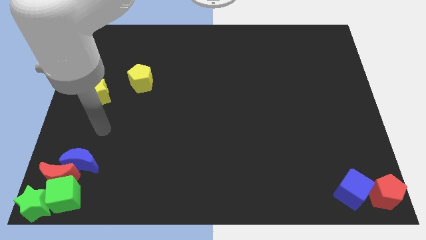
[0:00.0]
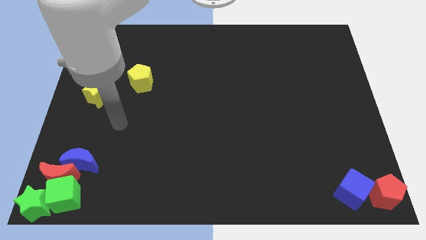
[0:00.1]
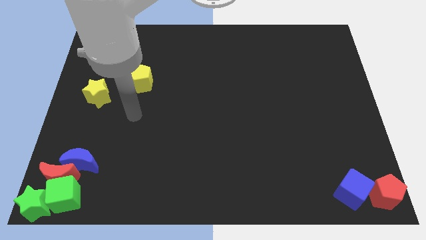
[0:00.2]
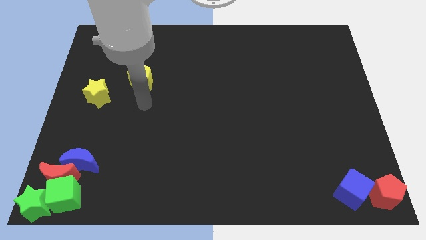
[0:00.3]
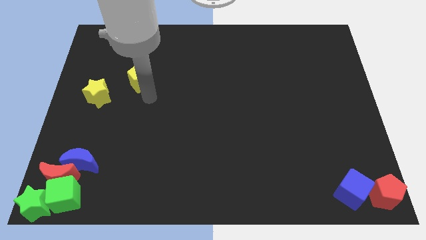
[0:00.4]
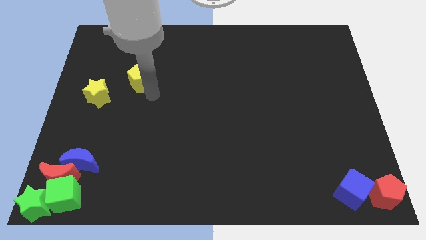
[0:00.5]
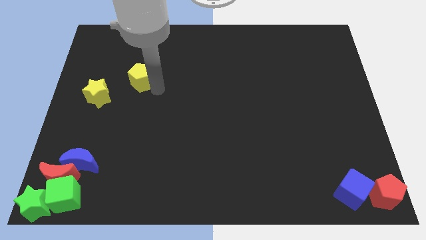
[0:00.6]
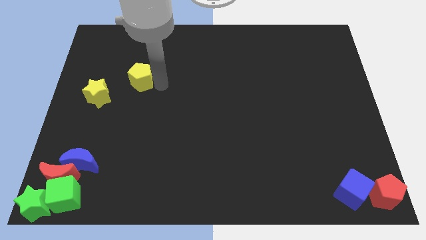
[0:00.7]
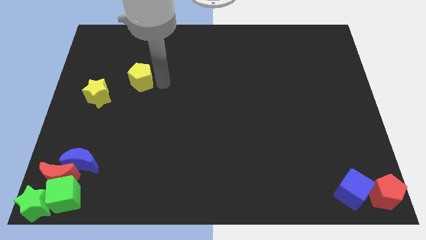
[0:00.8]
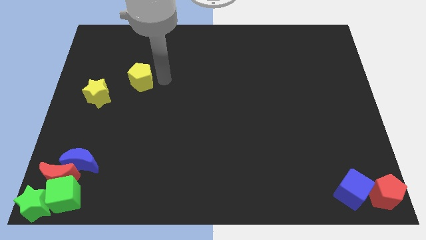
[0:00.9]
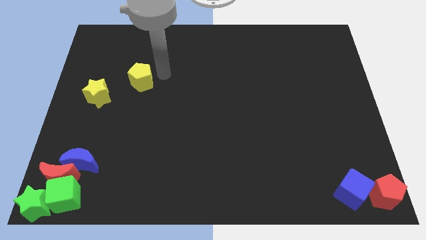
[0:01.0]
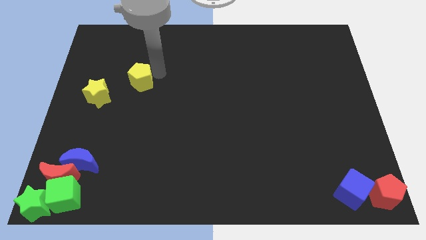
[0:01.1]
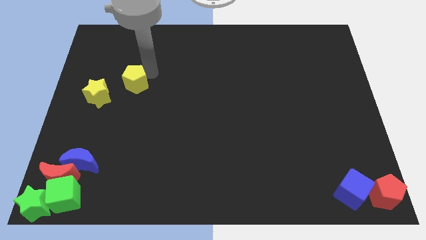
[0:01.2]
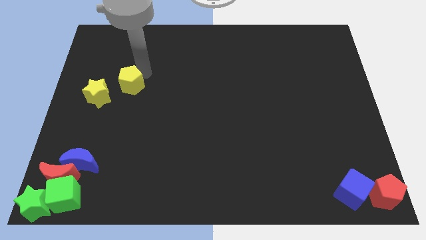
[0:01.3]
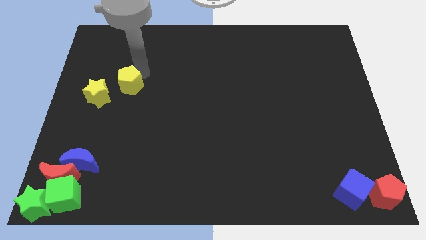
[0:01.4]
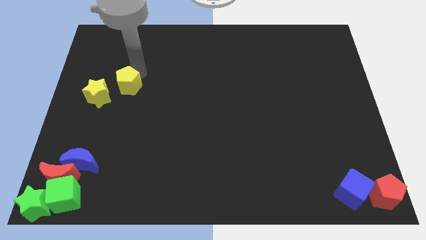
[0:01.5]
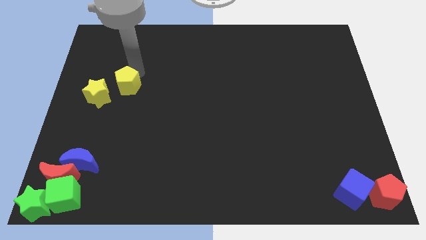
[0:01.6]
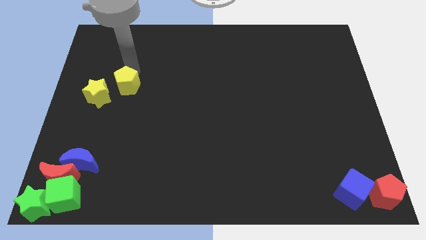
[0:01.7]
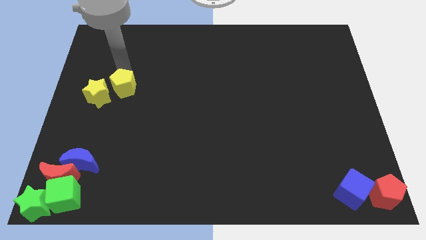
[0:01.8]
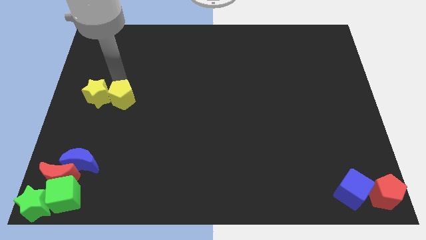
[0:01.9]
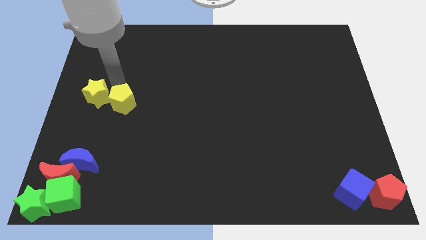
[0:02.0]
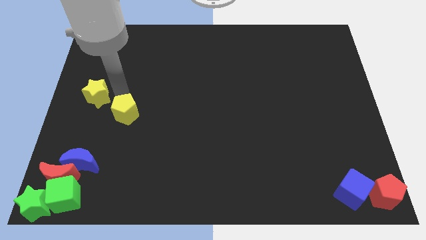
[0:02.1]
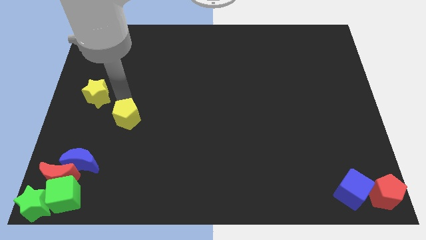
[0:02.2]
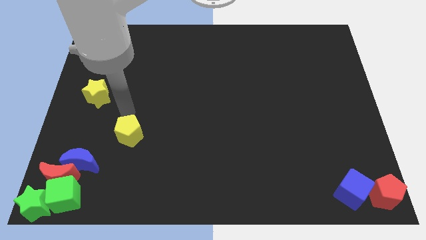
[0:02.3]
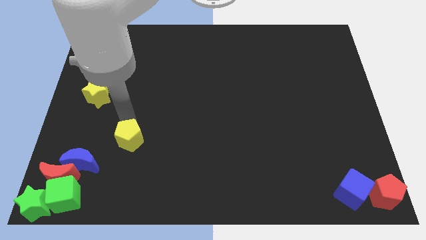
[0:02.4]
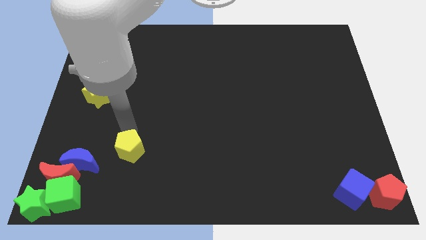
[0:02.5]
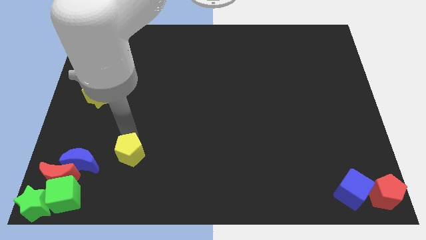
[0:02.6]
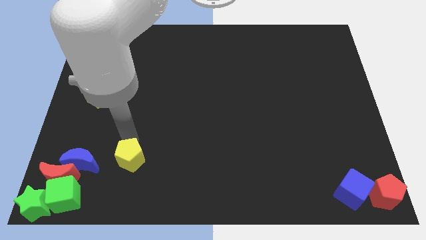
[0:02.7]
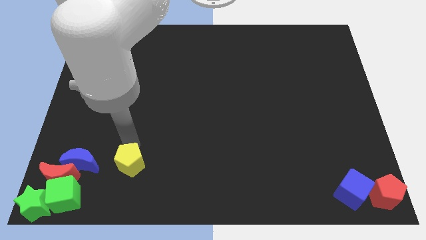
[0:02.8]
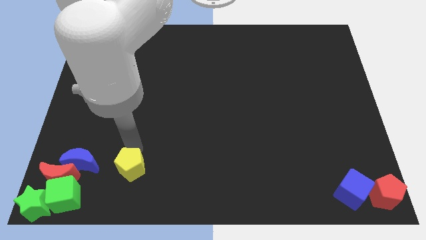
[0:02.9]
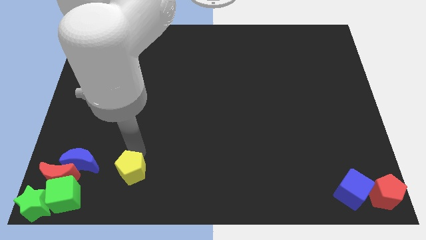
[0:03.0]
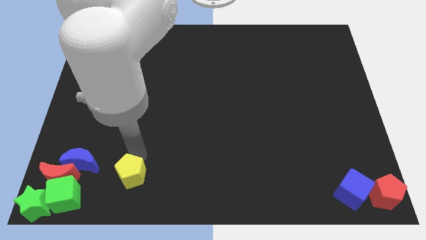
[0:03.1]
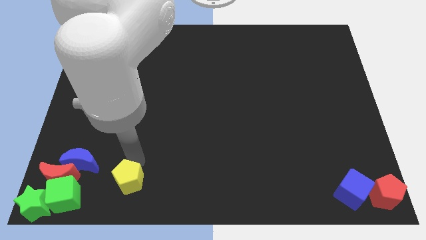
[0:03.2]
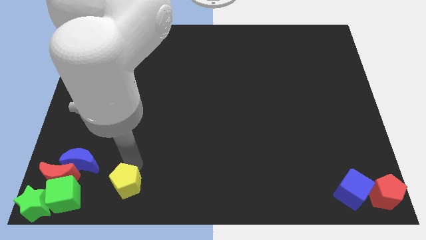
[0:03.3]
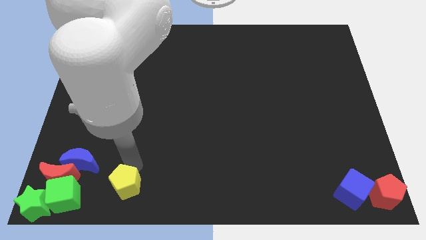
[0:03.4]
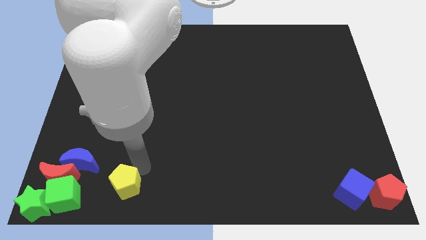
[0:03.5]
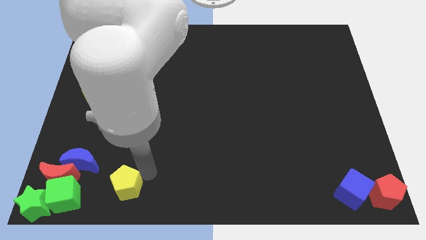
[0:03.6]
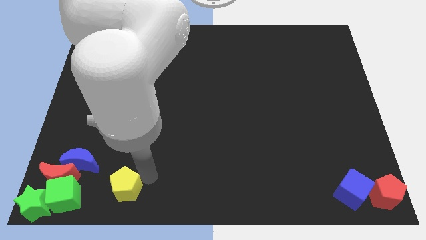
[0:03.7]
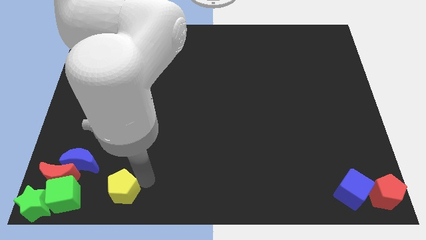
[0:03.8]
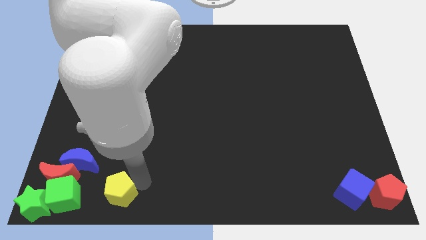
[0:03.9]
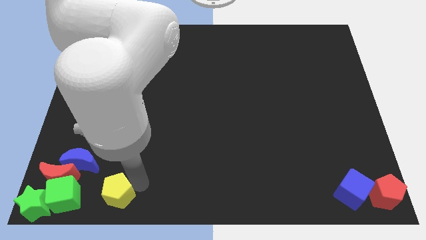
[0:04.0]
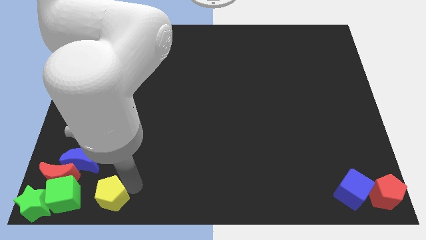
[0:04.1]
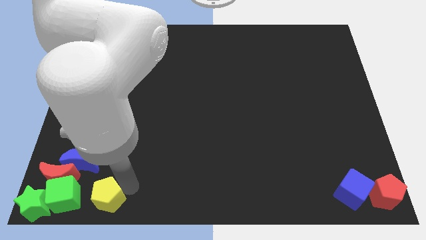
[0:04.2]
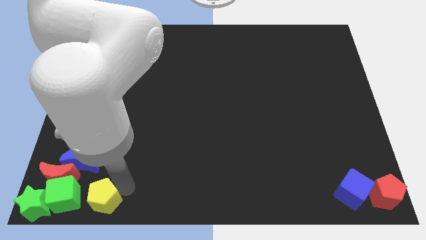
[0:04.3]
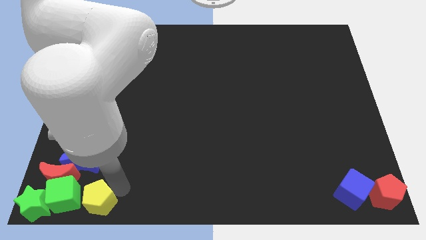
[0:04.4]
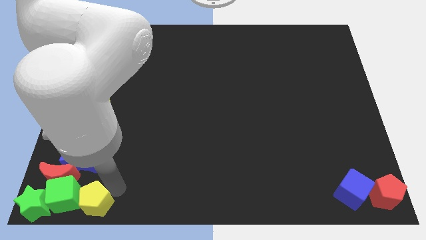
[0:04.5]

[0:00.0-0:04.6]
move the yellow pentagon close to the right side of the green cube

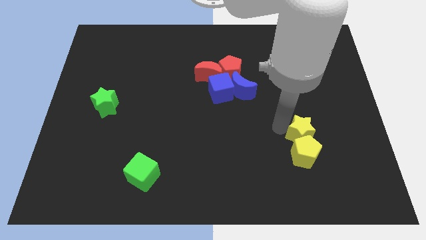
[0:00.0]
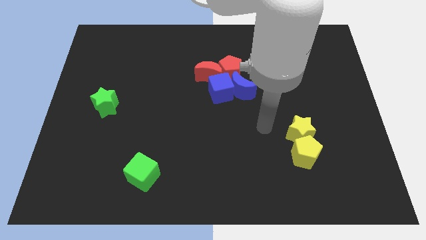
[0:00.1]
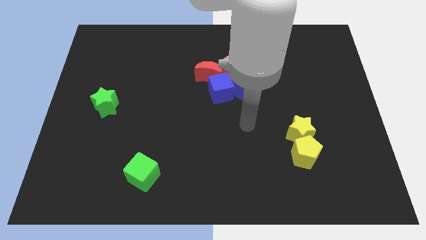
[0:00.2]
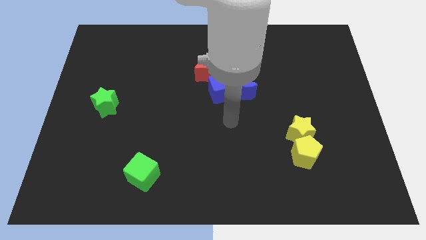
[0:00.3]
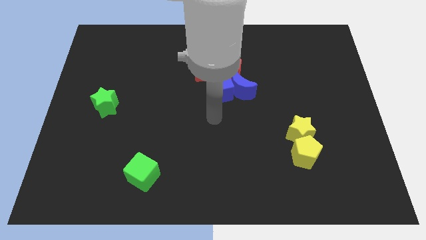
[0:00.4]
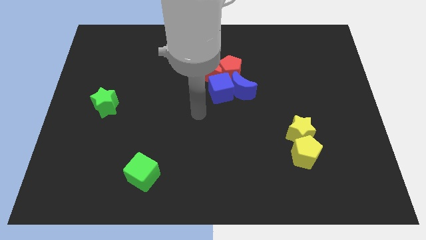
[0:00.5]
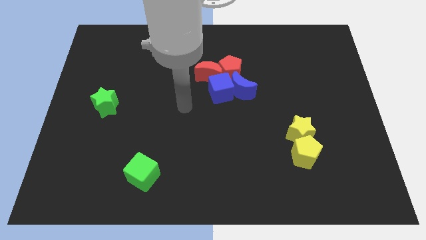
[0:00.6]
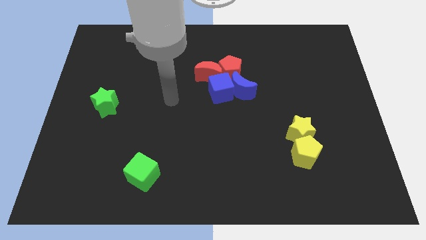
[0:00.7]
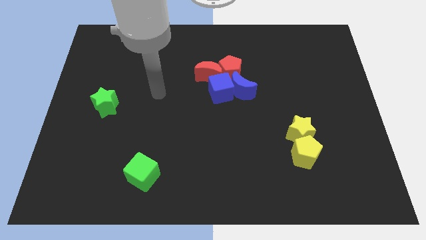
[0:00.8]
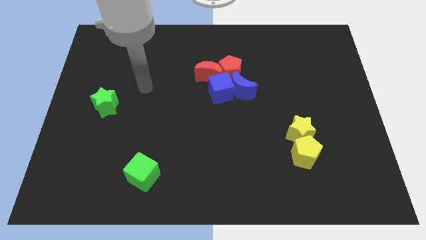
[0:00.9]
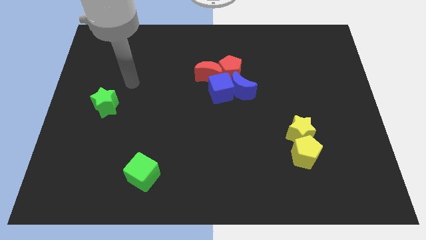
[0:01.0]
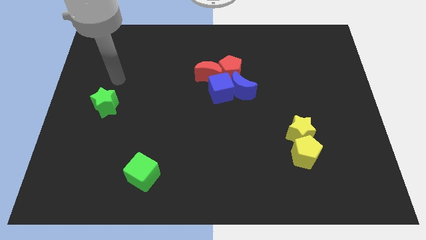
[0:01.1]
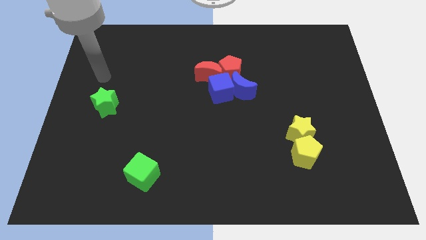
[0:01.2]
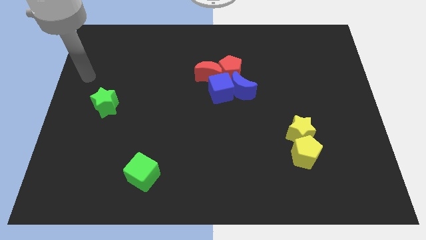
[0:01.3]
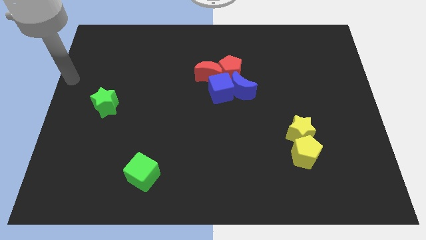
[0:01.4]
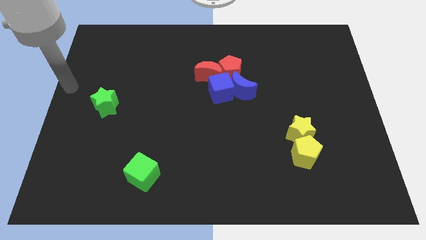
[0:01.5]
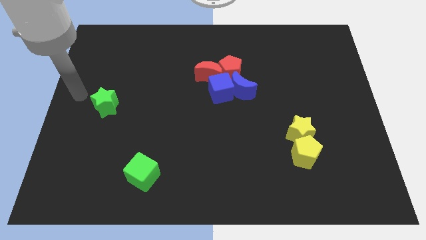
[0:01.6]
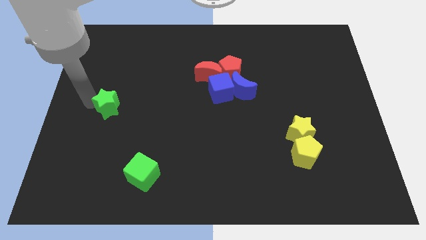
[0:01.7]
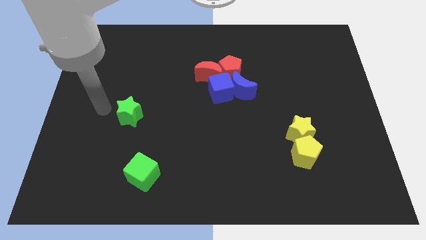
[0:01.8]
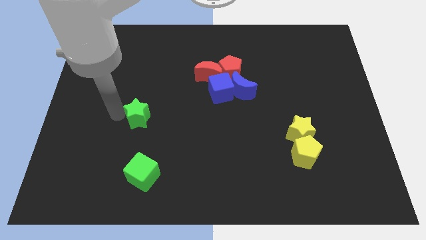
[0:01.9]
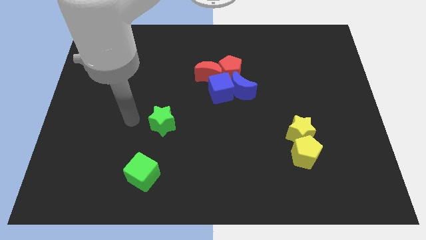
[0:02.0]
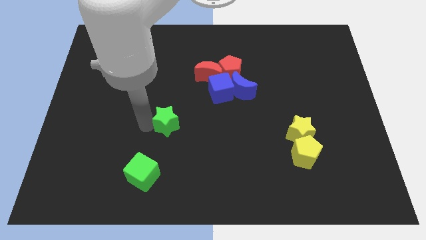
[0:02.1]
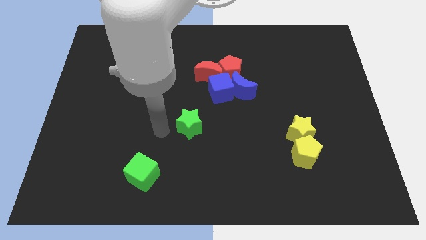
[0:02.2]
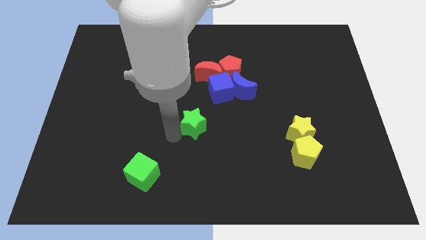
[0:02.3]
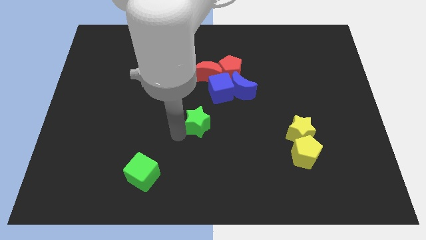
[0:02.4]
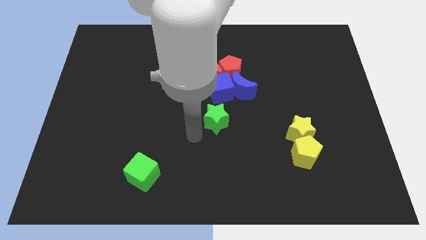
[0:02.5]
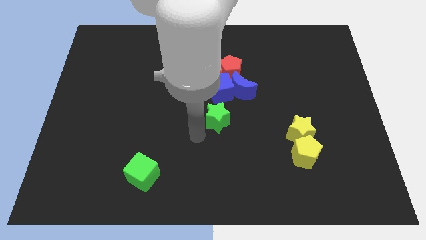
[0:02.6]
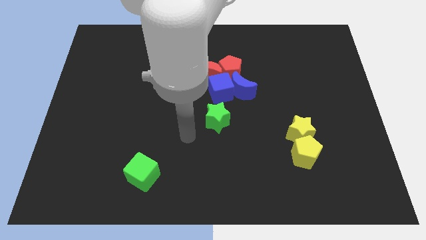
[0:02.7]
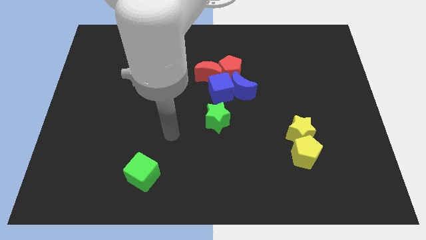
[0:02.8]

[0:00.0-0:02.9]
push the green star to the center of the board

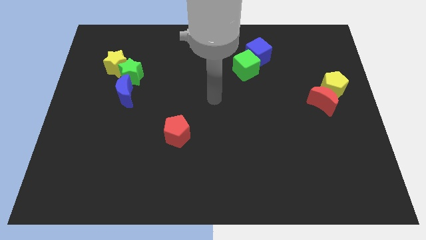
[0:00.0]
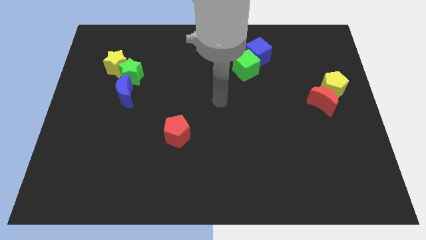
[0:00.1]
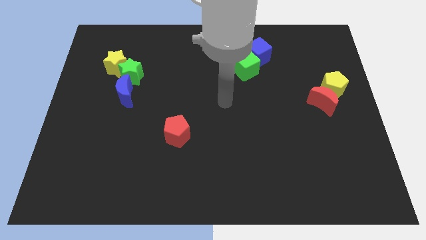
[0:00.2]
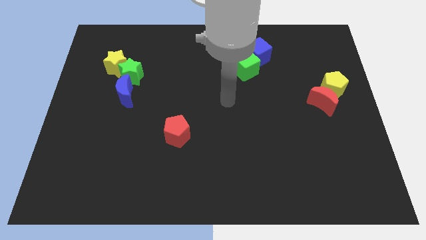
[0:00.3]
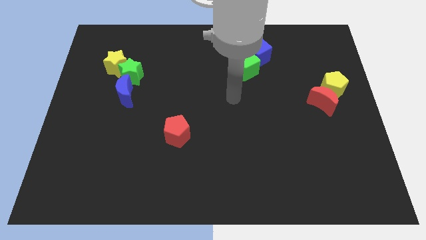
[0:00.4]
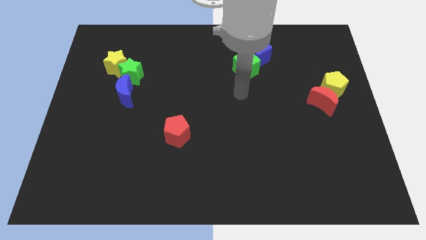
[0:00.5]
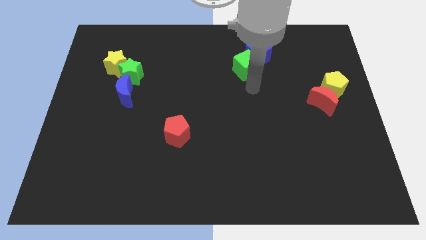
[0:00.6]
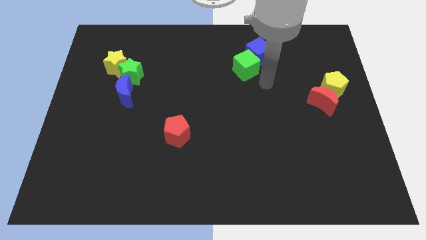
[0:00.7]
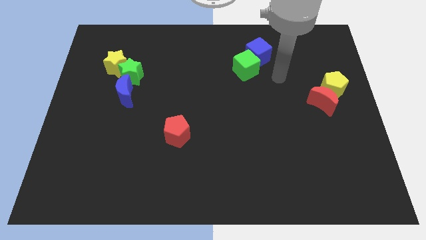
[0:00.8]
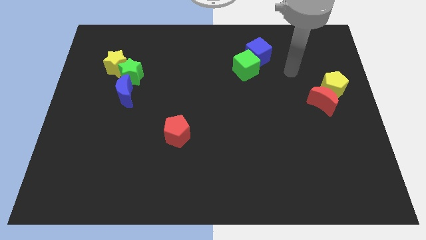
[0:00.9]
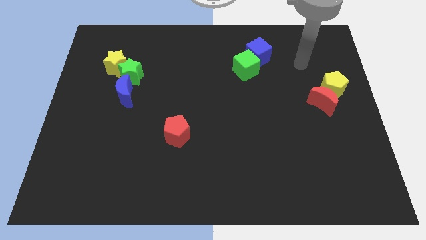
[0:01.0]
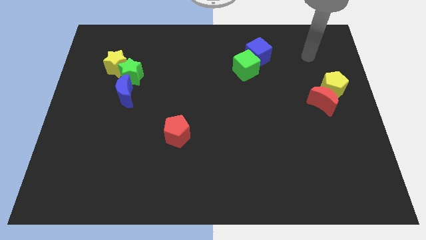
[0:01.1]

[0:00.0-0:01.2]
drag the pointer towards the top right corner of the board

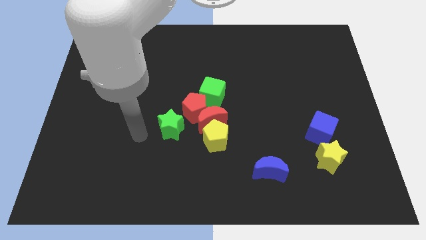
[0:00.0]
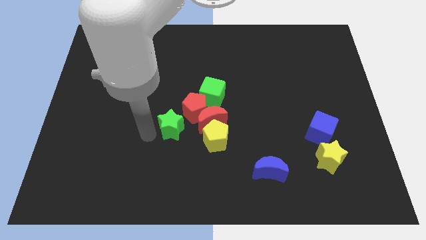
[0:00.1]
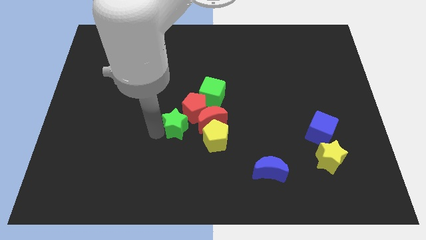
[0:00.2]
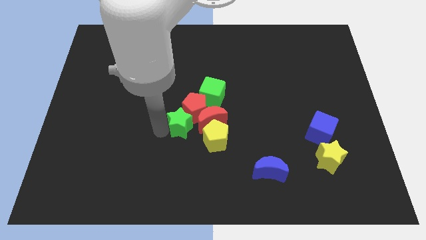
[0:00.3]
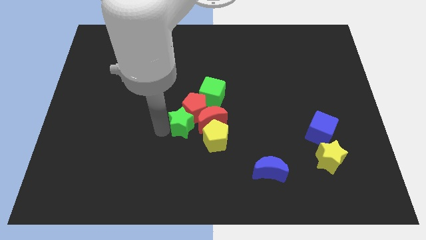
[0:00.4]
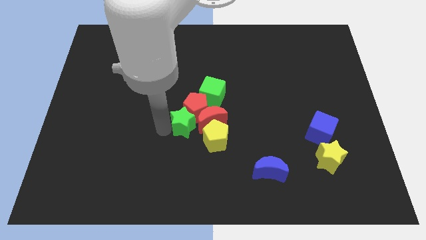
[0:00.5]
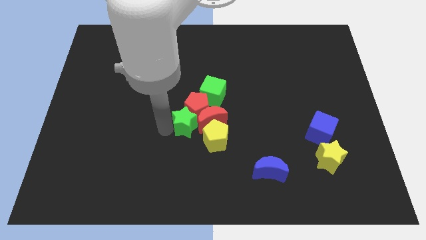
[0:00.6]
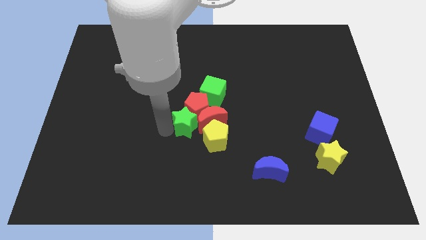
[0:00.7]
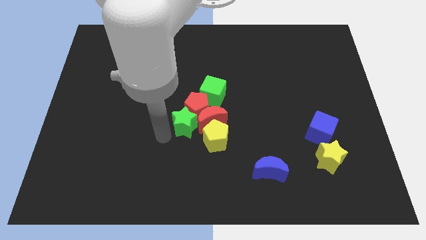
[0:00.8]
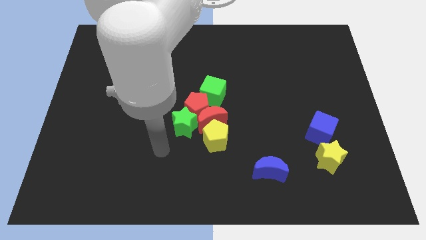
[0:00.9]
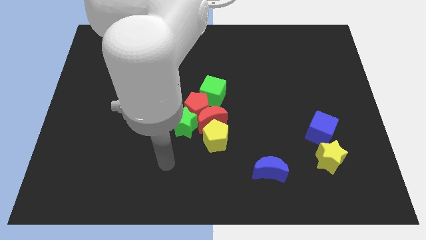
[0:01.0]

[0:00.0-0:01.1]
push the green star into the red pentagon
